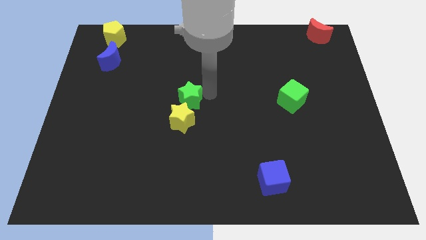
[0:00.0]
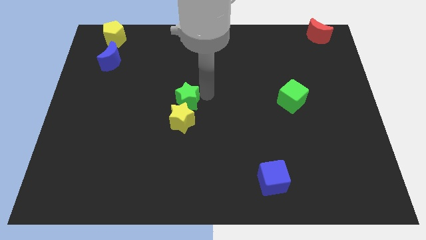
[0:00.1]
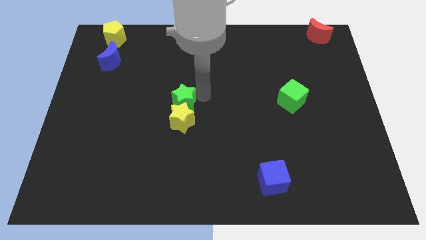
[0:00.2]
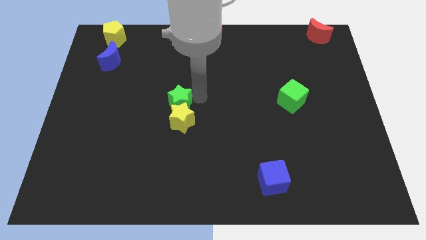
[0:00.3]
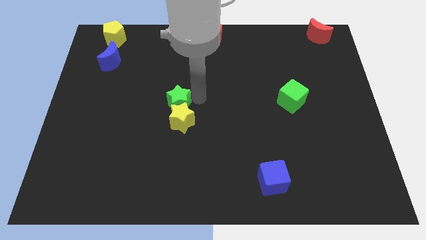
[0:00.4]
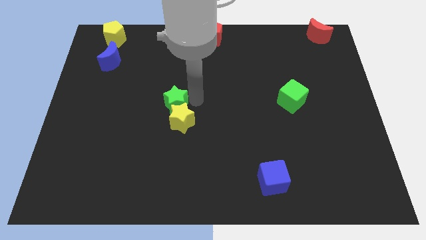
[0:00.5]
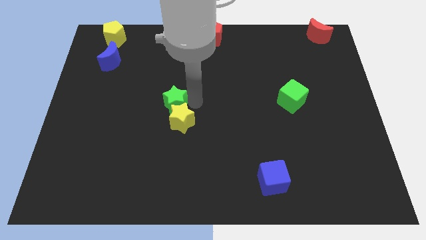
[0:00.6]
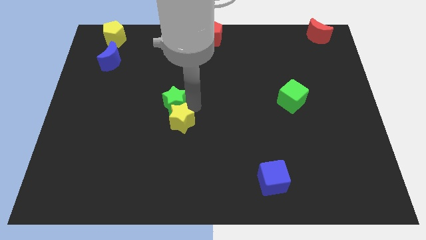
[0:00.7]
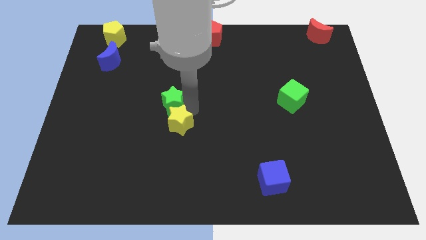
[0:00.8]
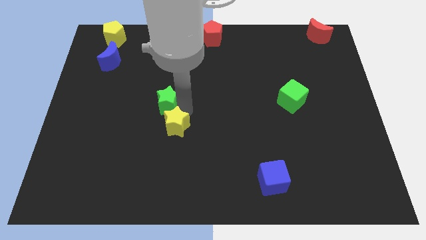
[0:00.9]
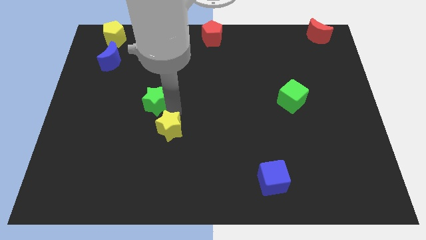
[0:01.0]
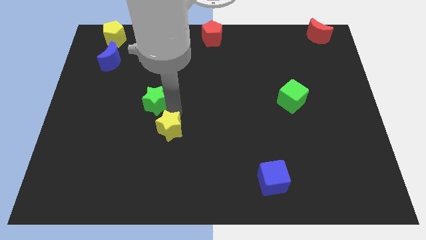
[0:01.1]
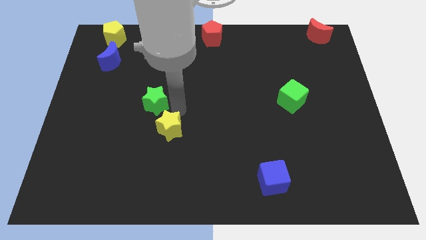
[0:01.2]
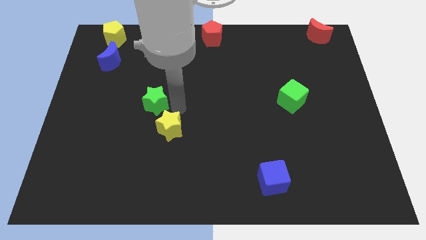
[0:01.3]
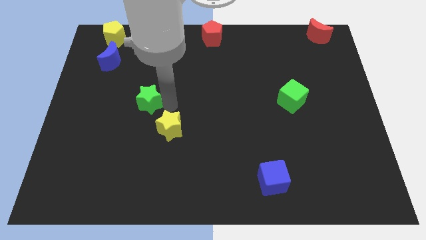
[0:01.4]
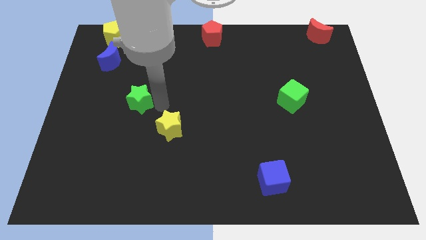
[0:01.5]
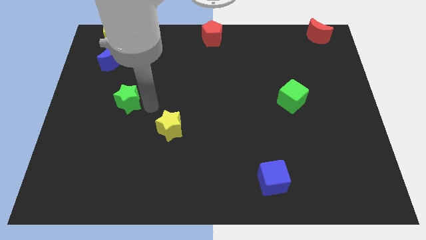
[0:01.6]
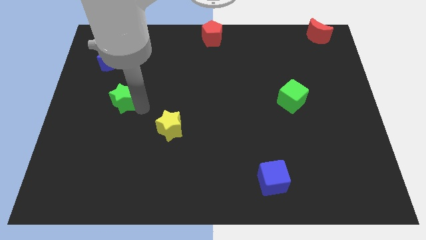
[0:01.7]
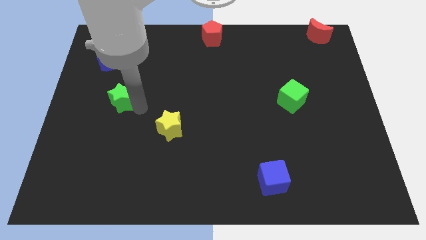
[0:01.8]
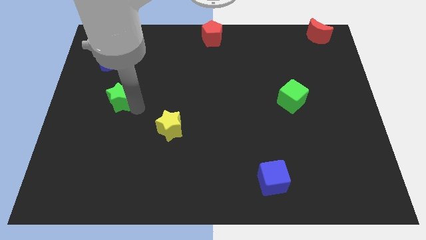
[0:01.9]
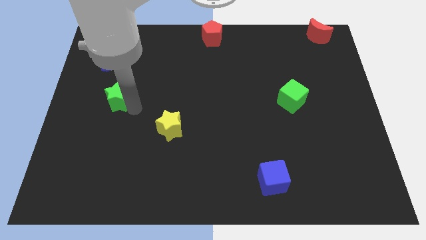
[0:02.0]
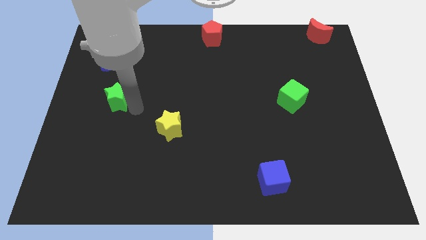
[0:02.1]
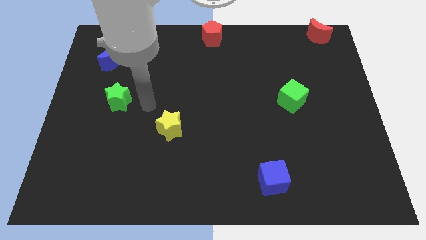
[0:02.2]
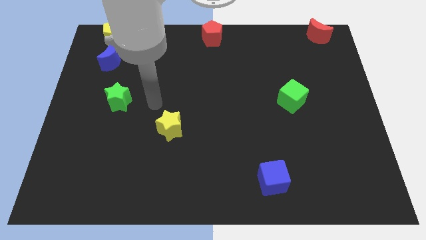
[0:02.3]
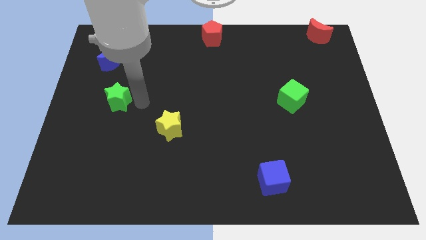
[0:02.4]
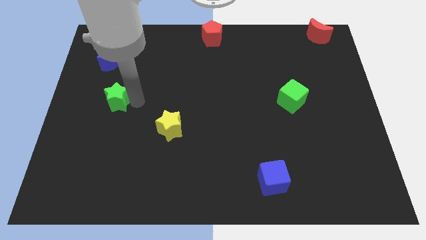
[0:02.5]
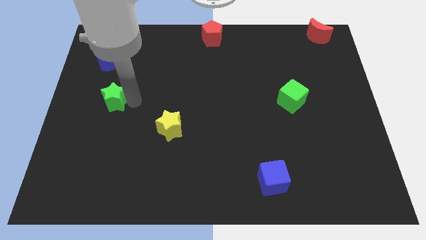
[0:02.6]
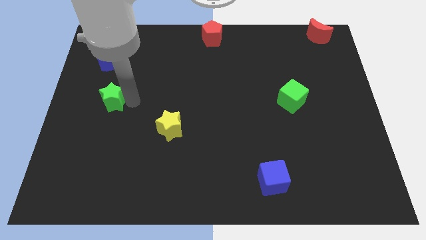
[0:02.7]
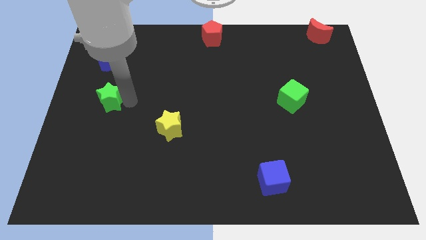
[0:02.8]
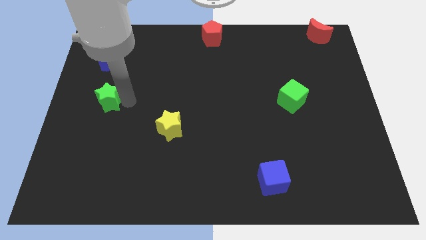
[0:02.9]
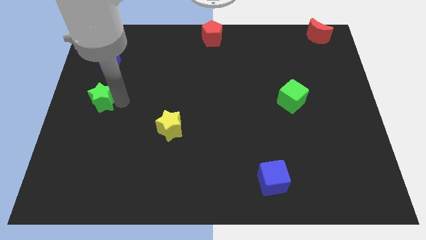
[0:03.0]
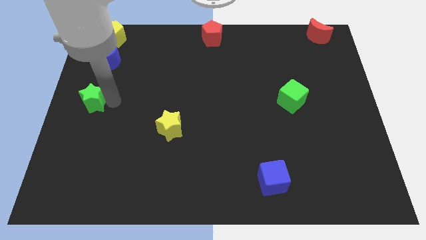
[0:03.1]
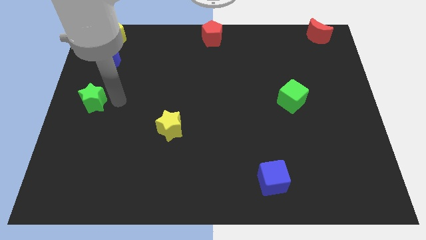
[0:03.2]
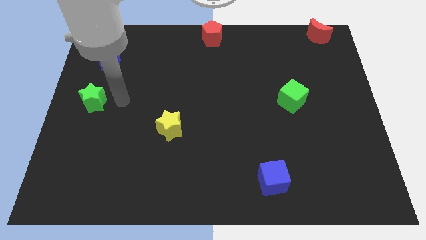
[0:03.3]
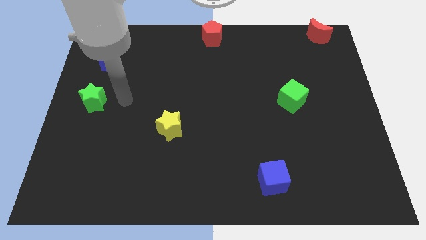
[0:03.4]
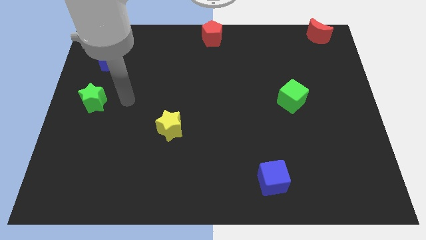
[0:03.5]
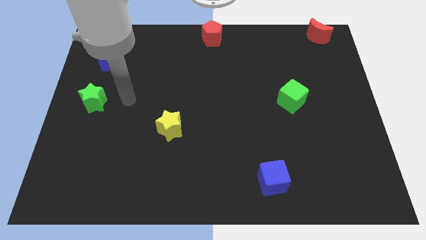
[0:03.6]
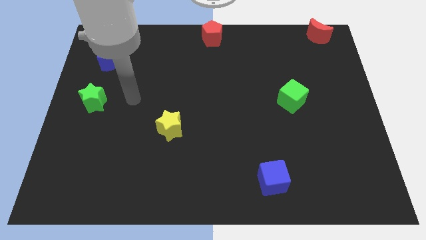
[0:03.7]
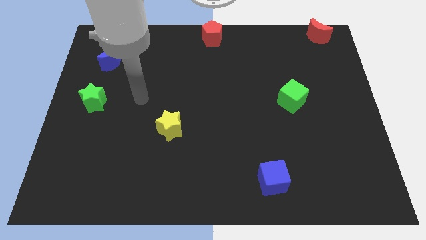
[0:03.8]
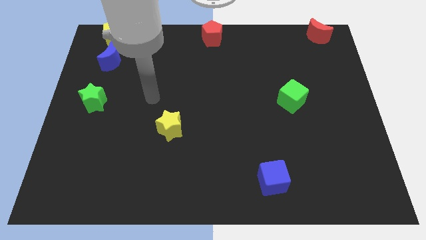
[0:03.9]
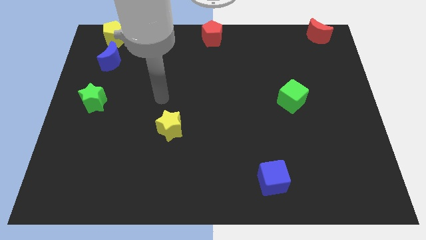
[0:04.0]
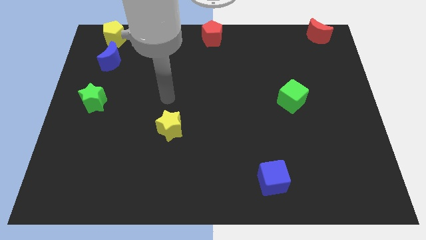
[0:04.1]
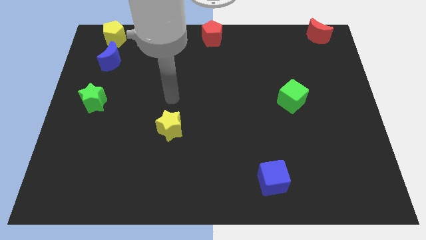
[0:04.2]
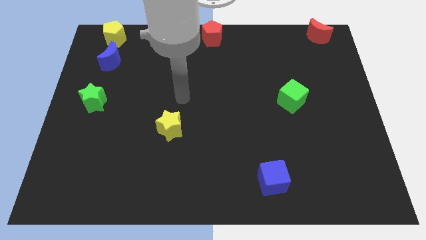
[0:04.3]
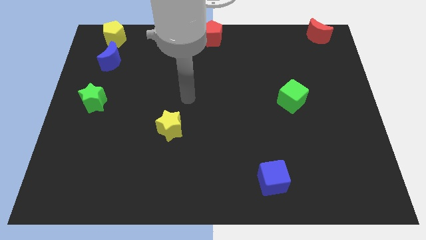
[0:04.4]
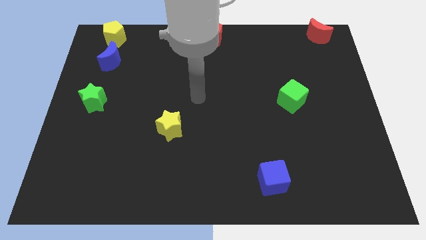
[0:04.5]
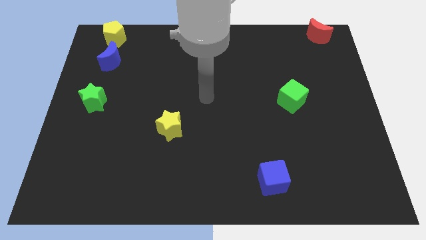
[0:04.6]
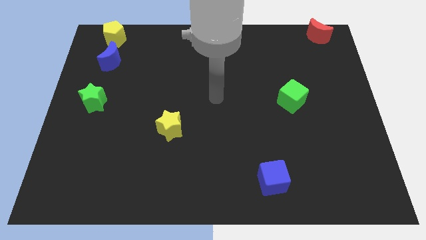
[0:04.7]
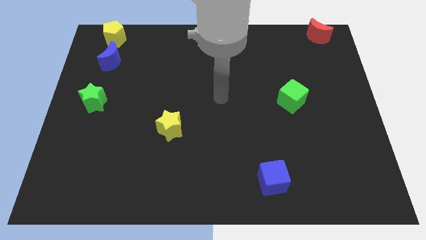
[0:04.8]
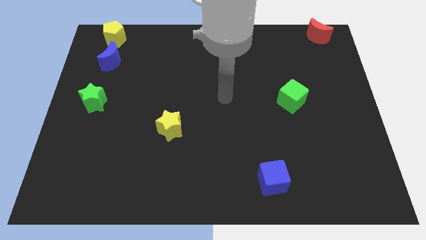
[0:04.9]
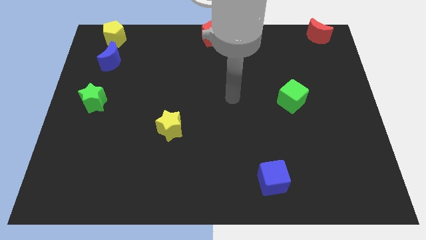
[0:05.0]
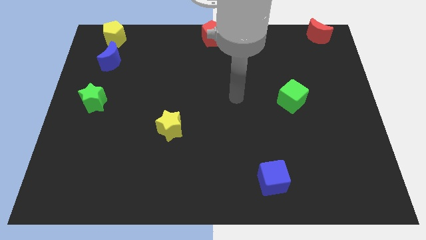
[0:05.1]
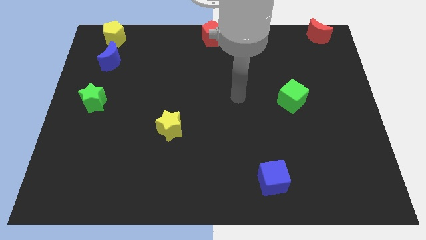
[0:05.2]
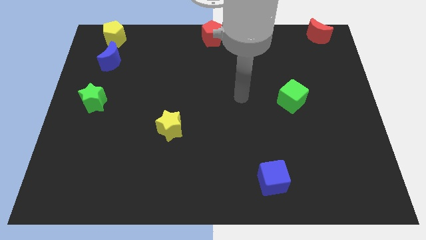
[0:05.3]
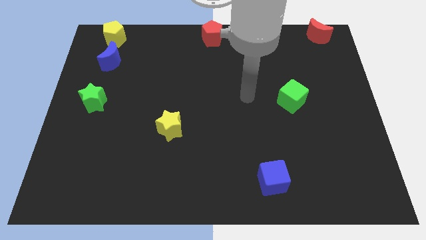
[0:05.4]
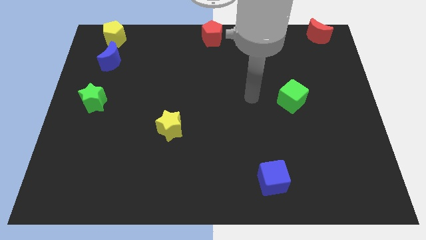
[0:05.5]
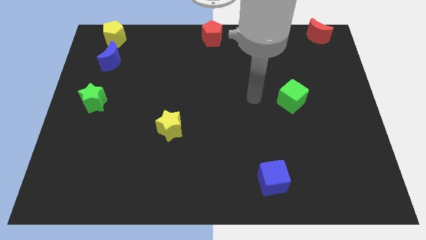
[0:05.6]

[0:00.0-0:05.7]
move the green star to the left center of the board

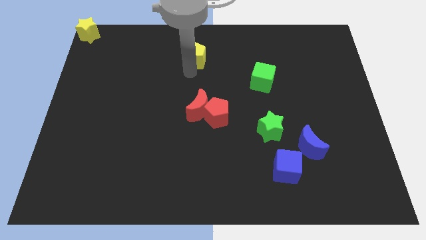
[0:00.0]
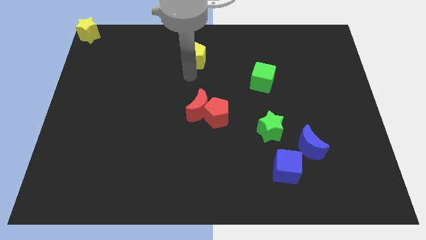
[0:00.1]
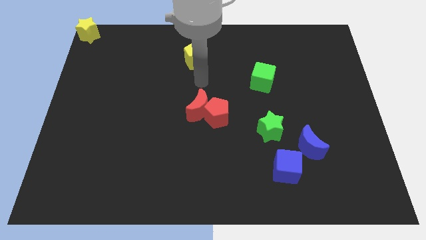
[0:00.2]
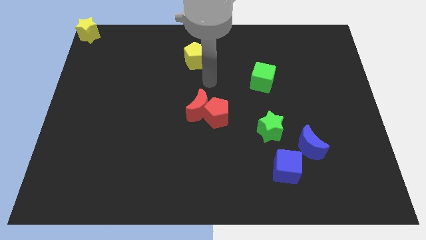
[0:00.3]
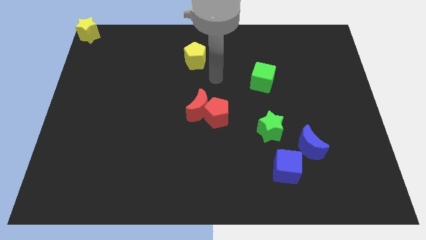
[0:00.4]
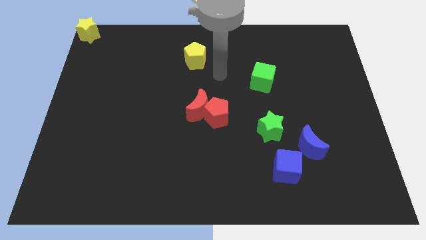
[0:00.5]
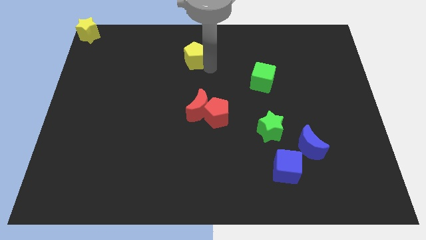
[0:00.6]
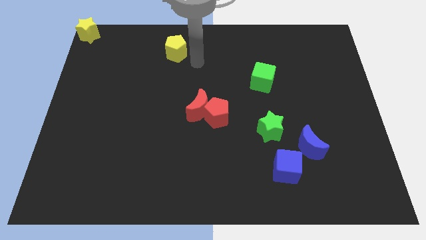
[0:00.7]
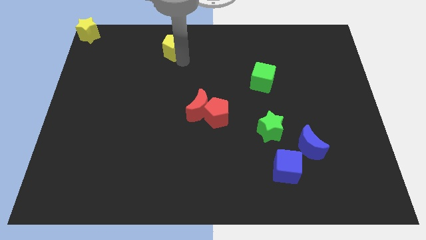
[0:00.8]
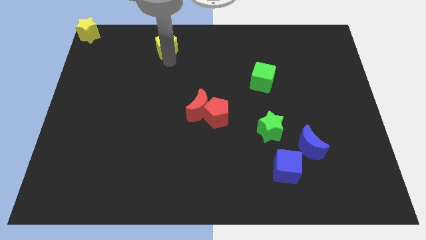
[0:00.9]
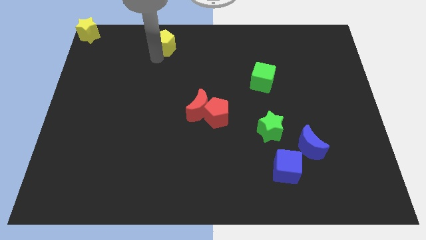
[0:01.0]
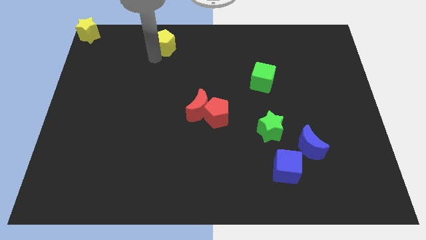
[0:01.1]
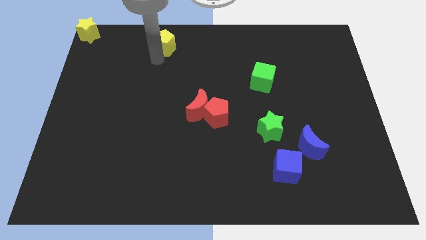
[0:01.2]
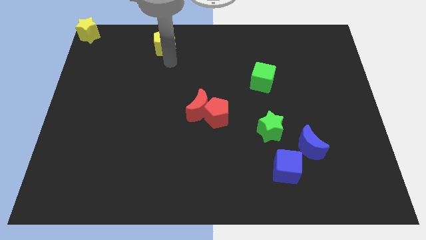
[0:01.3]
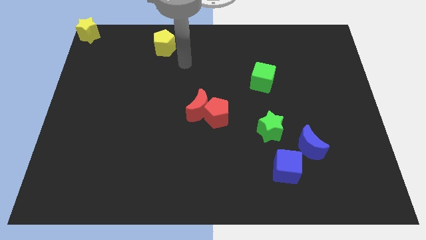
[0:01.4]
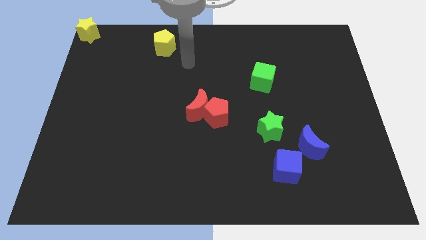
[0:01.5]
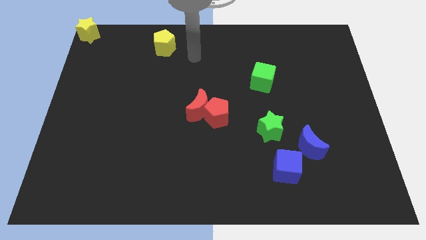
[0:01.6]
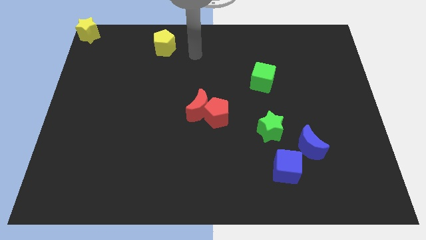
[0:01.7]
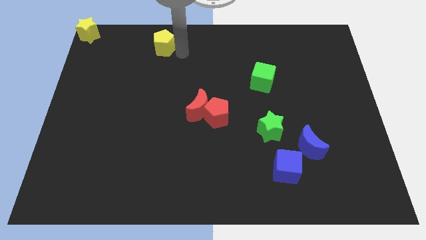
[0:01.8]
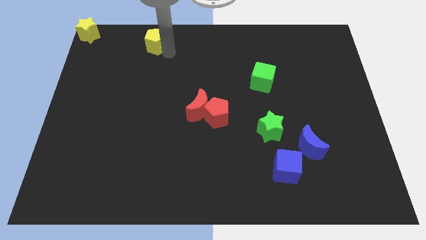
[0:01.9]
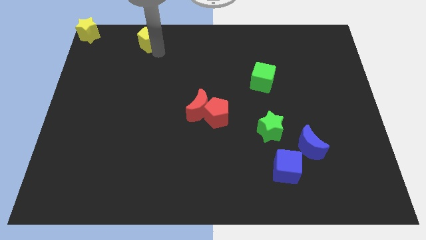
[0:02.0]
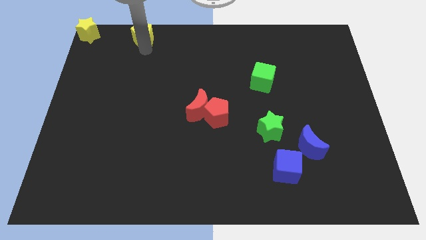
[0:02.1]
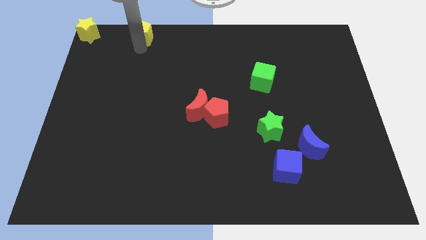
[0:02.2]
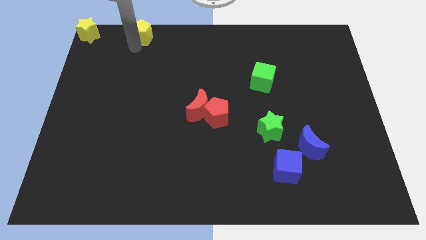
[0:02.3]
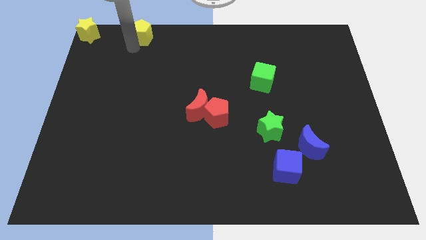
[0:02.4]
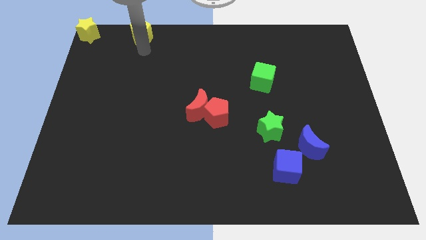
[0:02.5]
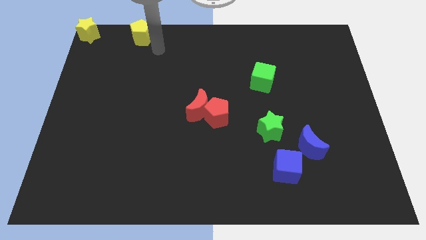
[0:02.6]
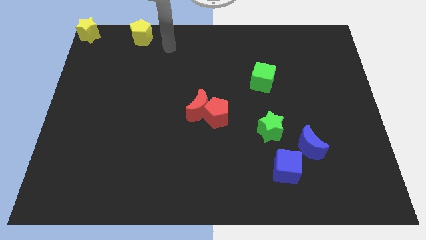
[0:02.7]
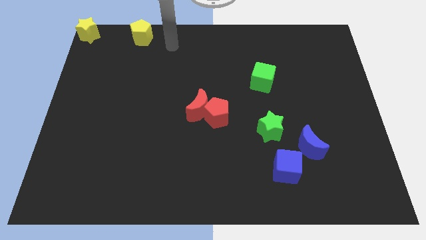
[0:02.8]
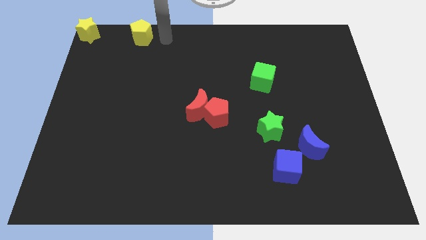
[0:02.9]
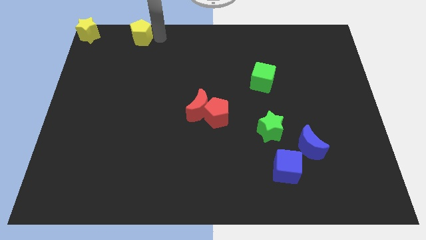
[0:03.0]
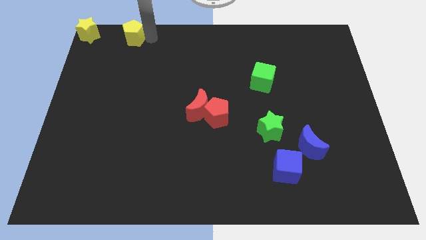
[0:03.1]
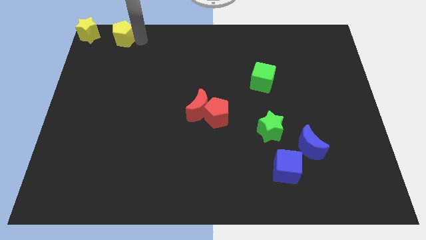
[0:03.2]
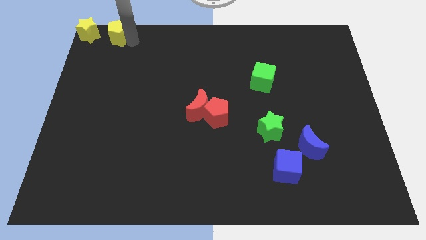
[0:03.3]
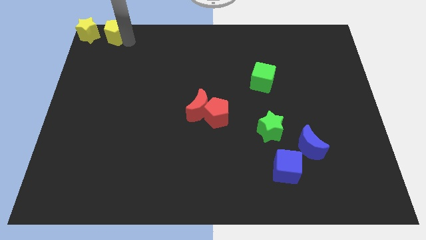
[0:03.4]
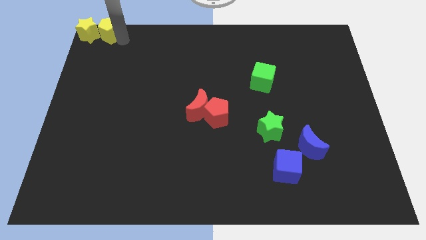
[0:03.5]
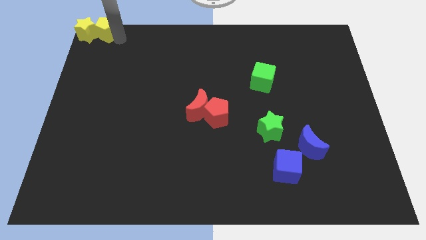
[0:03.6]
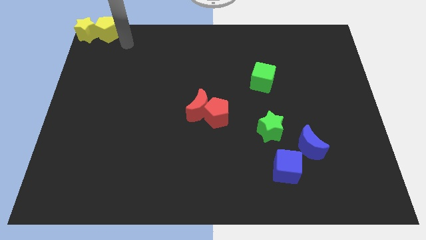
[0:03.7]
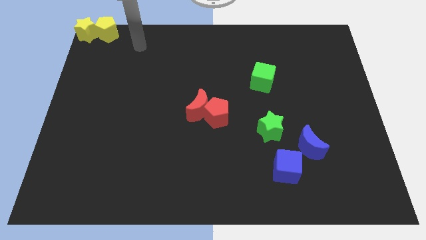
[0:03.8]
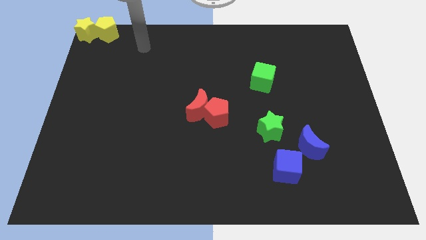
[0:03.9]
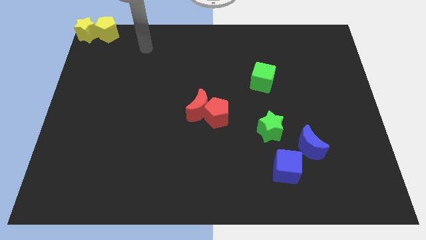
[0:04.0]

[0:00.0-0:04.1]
place the yellow pentagon towards the right side of the yellow star
